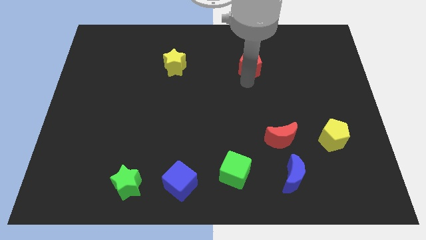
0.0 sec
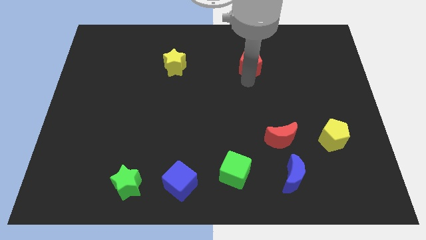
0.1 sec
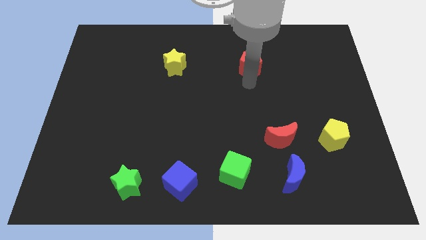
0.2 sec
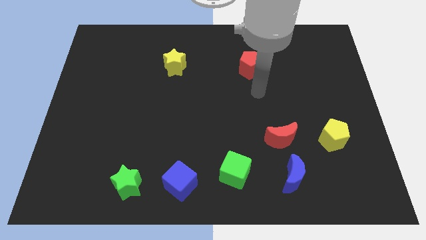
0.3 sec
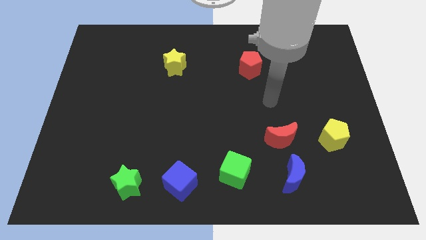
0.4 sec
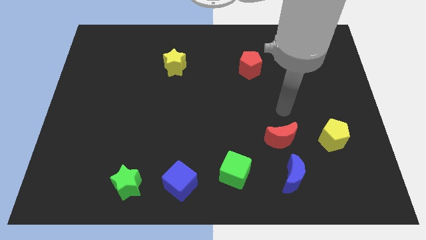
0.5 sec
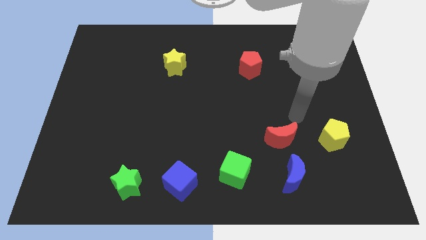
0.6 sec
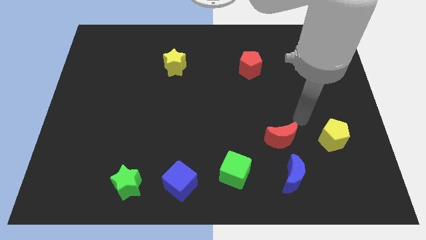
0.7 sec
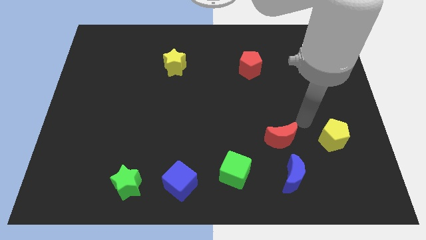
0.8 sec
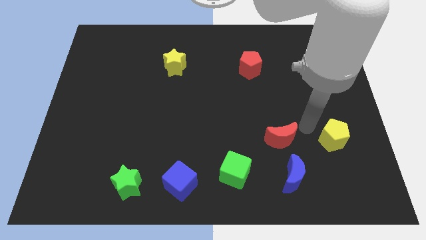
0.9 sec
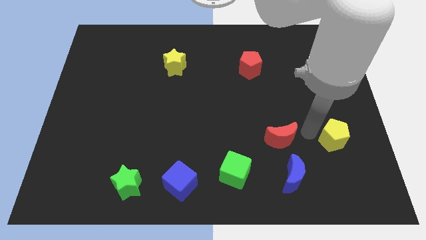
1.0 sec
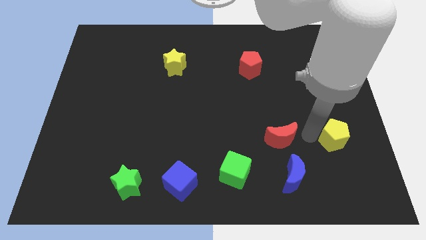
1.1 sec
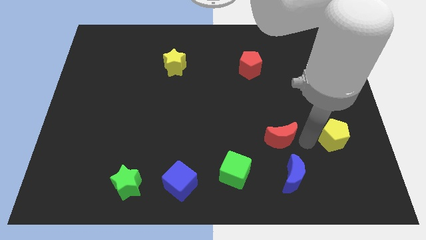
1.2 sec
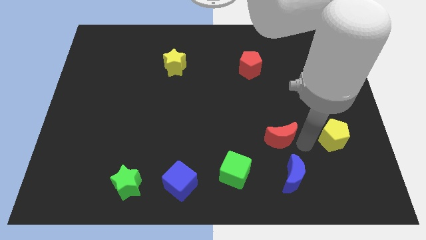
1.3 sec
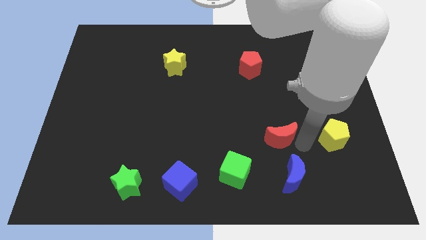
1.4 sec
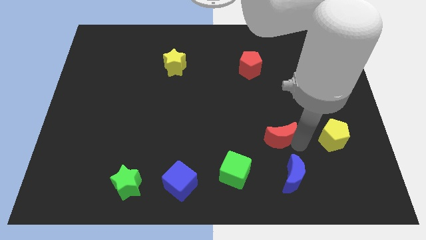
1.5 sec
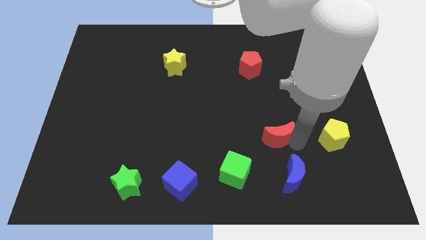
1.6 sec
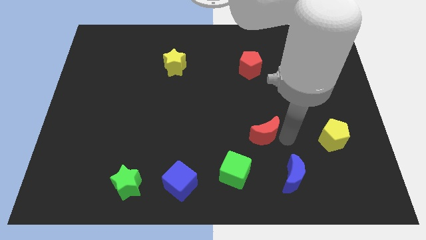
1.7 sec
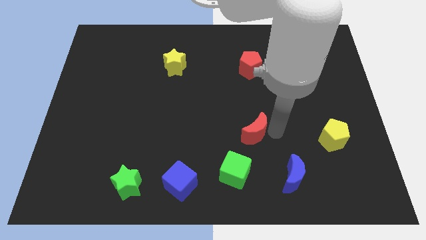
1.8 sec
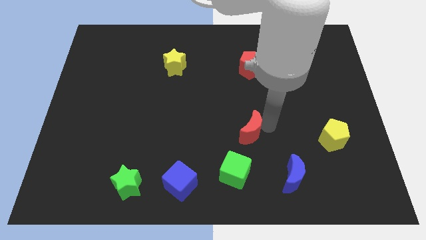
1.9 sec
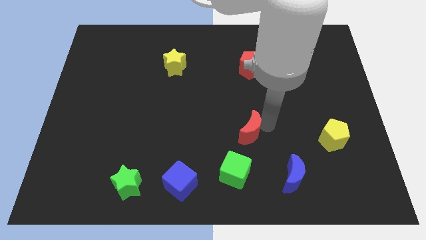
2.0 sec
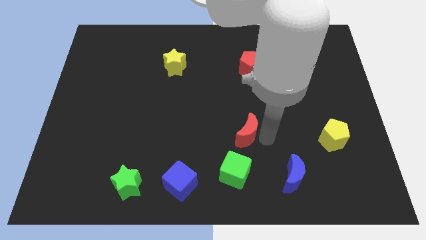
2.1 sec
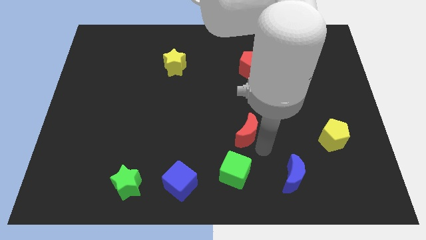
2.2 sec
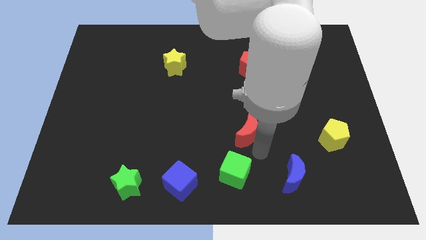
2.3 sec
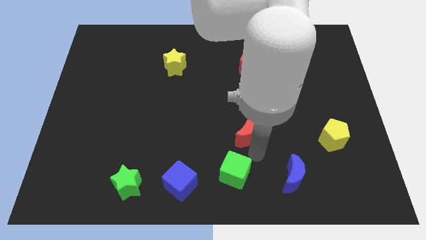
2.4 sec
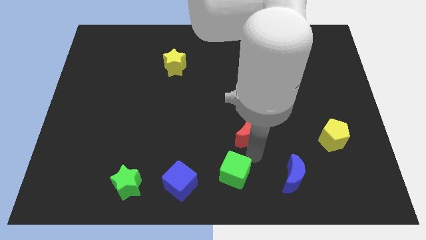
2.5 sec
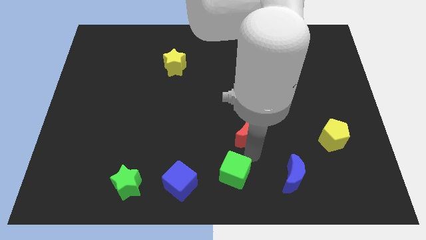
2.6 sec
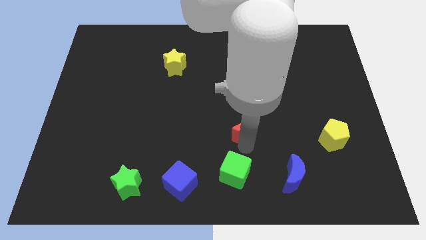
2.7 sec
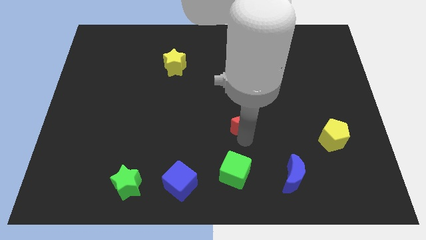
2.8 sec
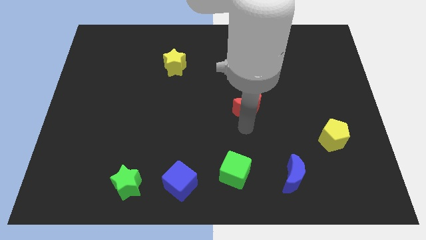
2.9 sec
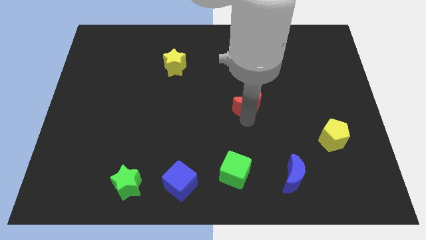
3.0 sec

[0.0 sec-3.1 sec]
push the red moon to the top side of the green cube

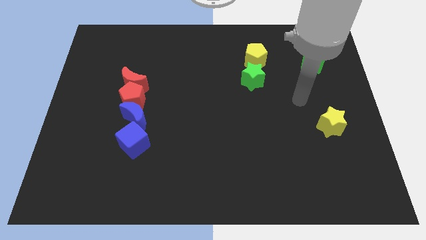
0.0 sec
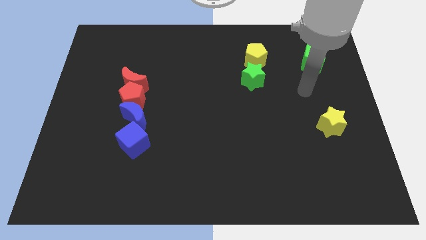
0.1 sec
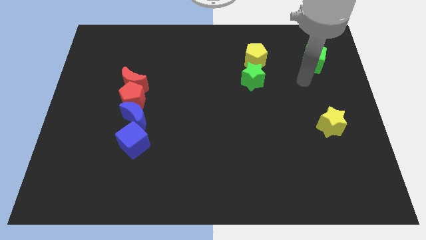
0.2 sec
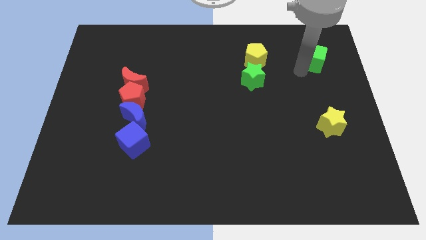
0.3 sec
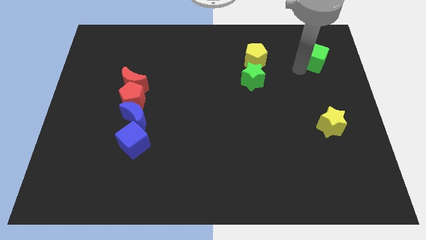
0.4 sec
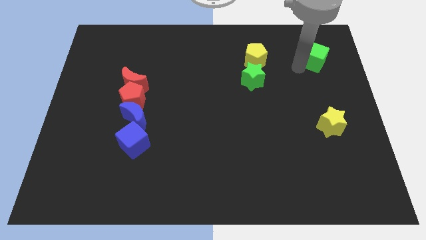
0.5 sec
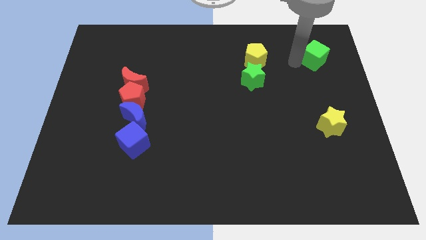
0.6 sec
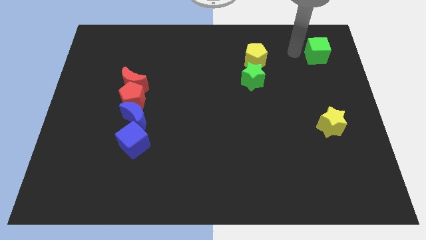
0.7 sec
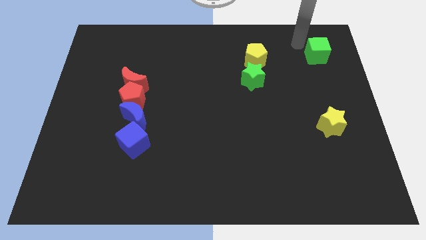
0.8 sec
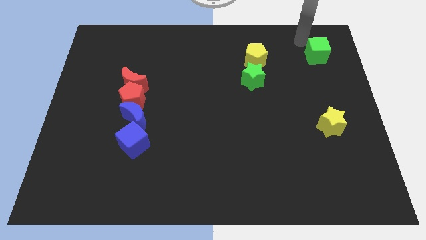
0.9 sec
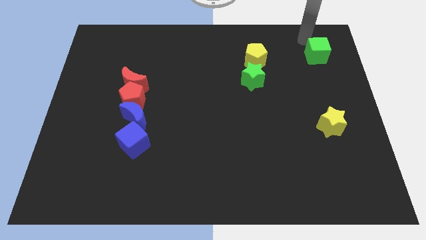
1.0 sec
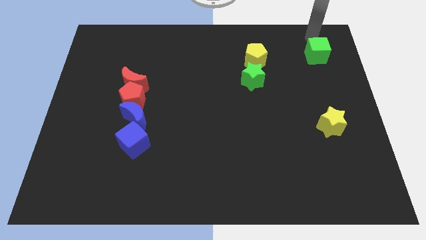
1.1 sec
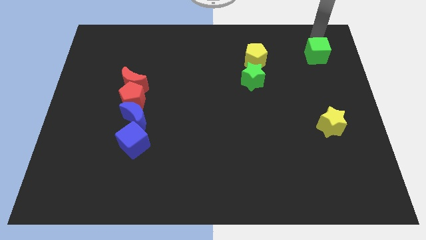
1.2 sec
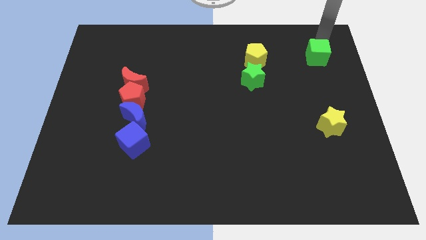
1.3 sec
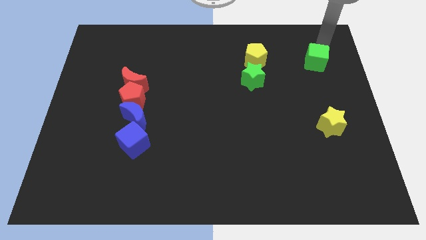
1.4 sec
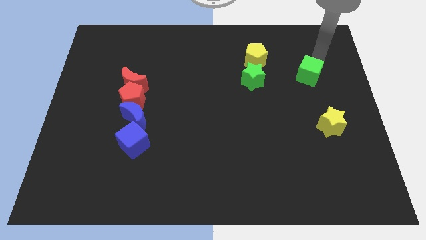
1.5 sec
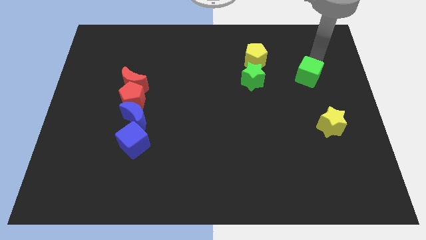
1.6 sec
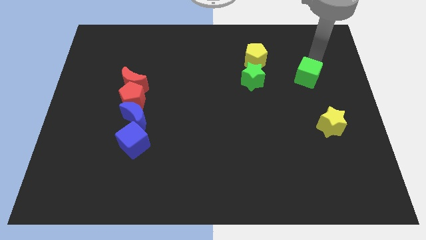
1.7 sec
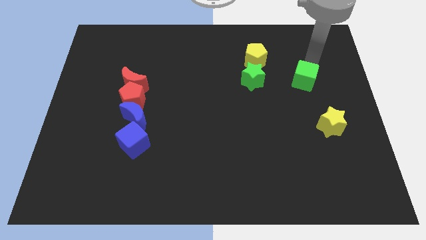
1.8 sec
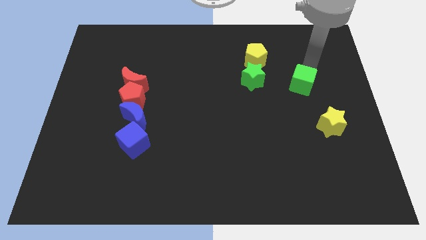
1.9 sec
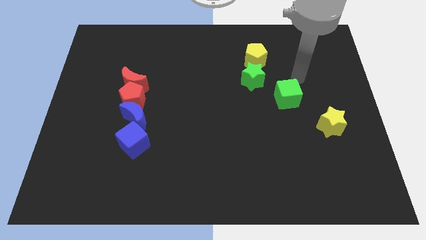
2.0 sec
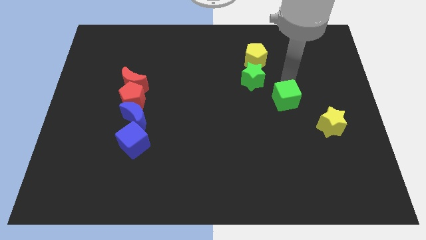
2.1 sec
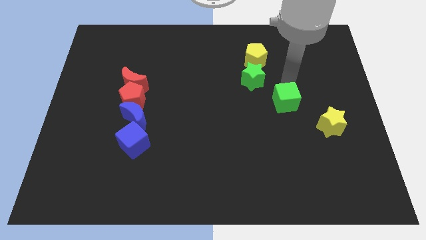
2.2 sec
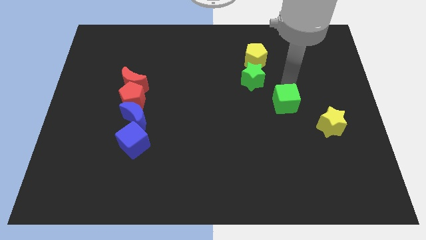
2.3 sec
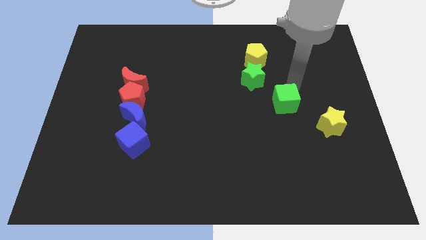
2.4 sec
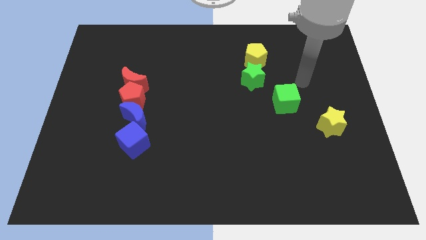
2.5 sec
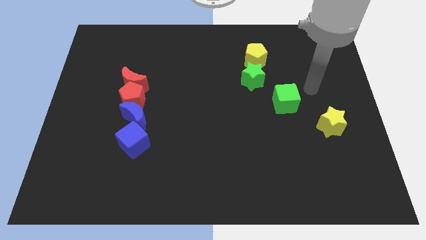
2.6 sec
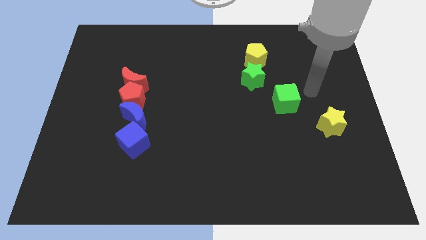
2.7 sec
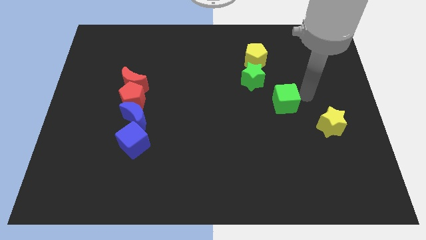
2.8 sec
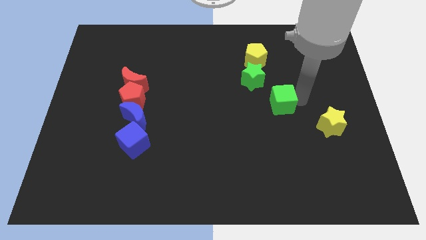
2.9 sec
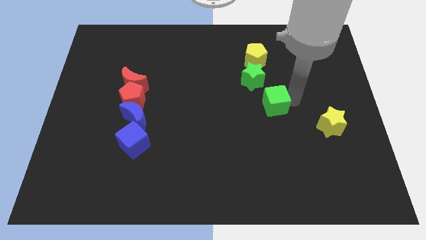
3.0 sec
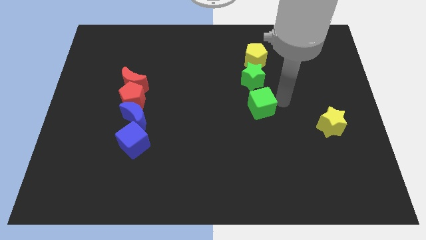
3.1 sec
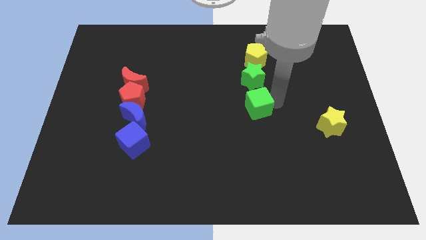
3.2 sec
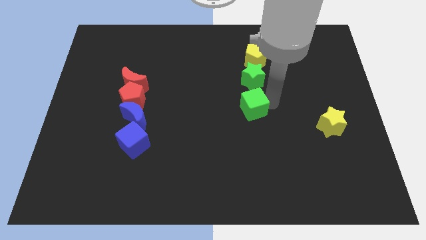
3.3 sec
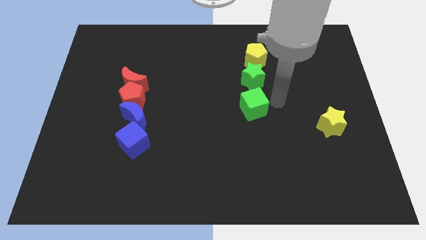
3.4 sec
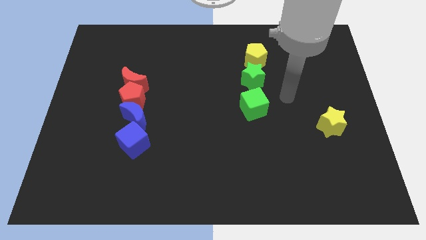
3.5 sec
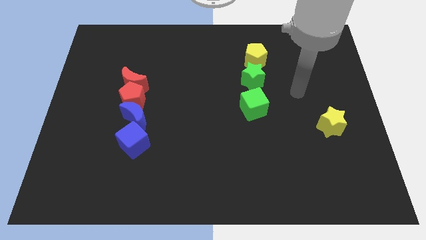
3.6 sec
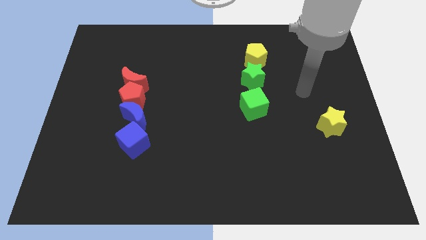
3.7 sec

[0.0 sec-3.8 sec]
place the green cube under the green star

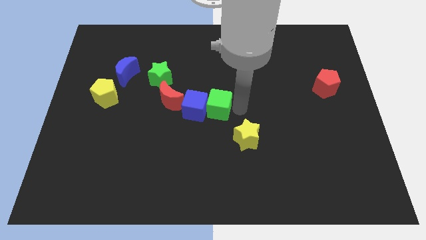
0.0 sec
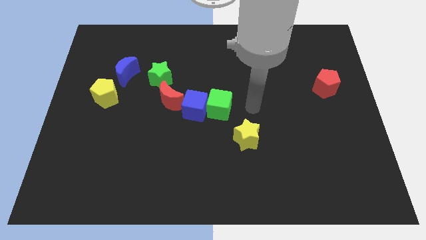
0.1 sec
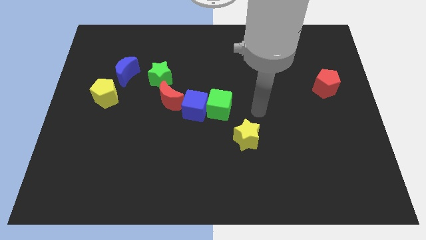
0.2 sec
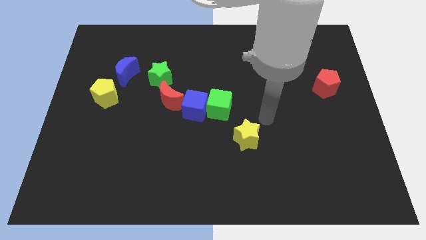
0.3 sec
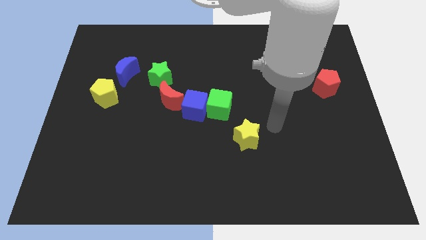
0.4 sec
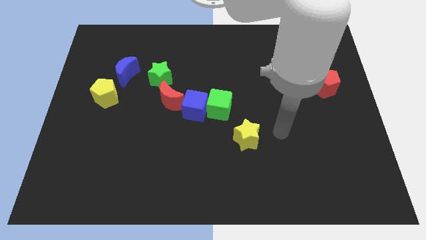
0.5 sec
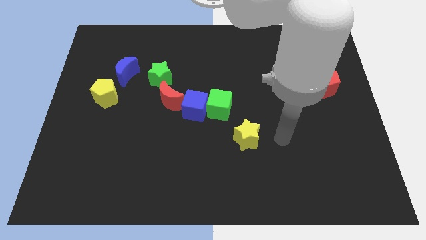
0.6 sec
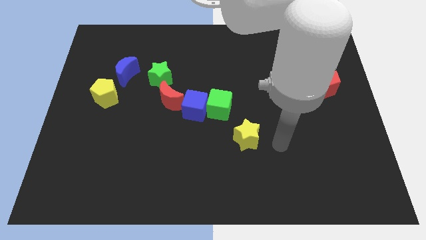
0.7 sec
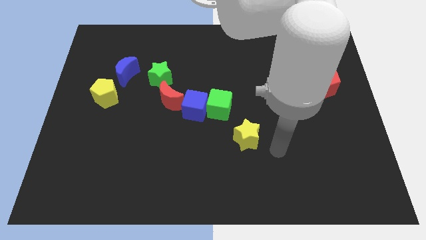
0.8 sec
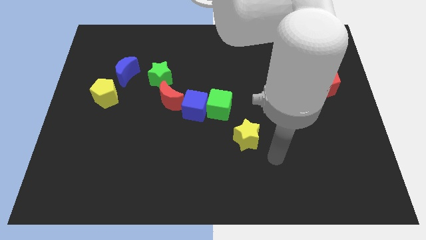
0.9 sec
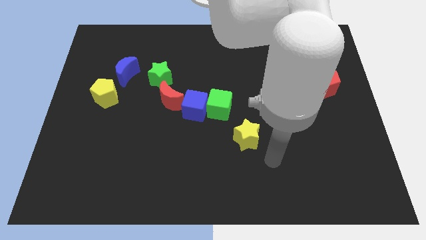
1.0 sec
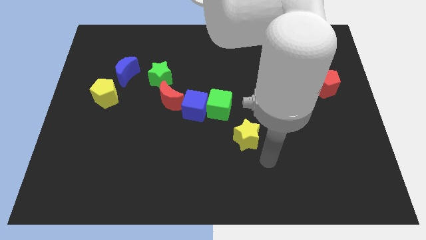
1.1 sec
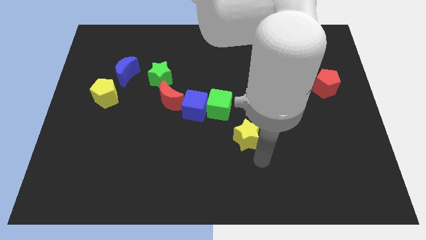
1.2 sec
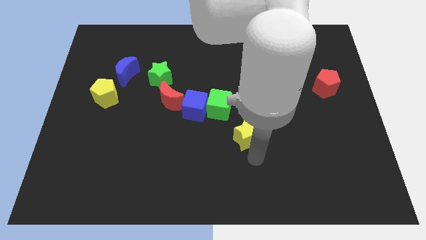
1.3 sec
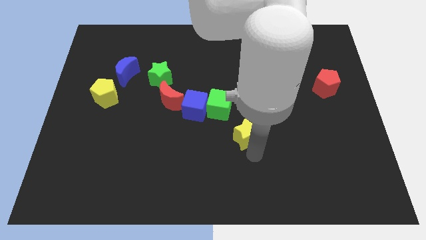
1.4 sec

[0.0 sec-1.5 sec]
move away from the green cube

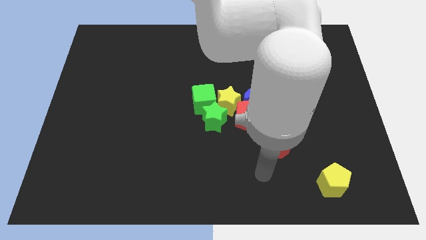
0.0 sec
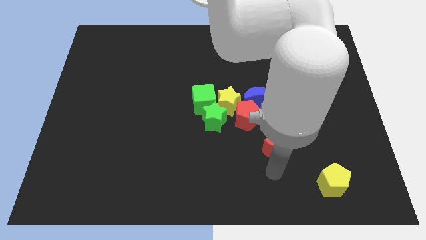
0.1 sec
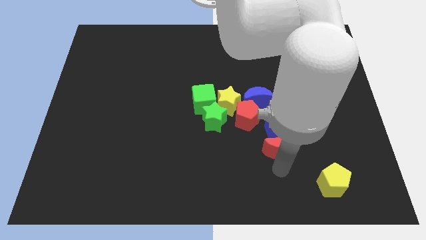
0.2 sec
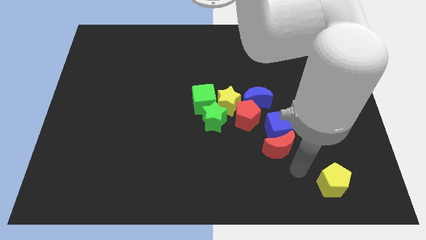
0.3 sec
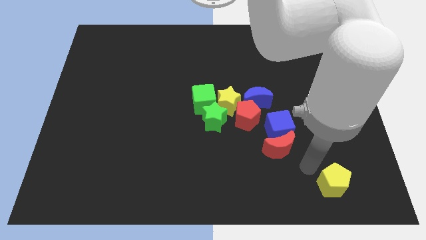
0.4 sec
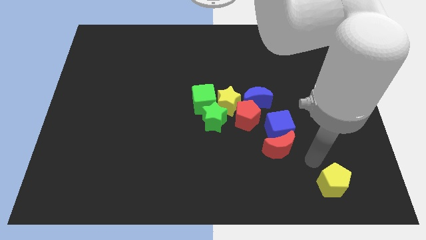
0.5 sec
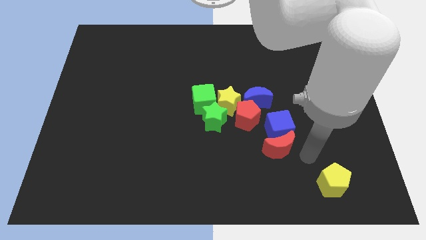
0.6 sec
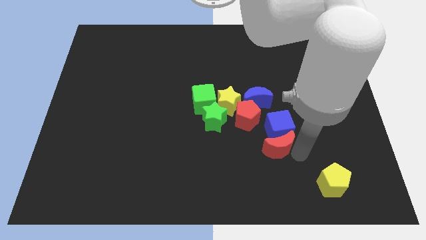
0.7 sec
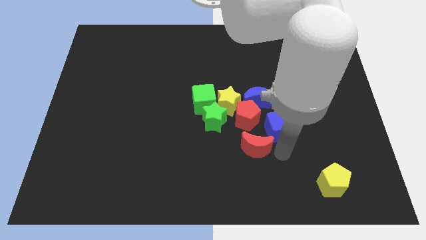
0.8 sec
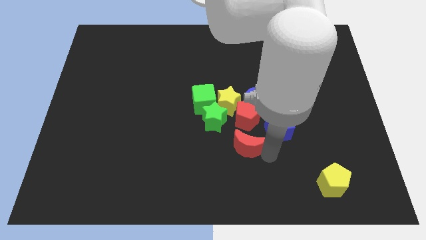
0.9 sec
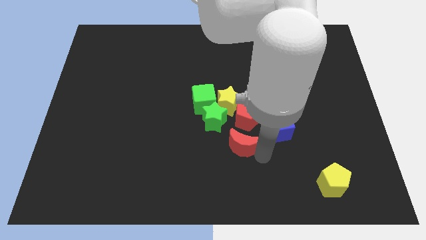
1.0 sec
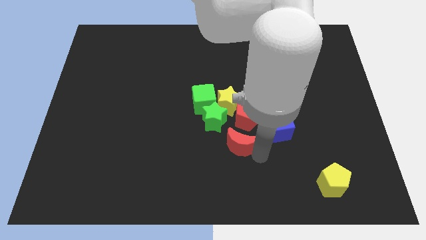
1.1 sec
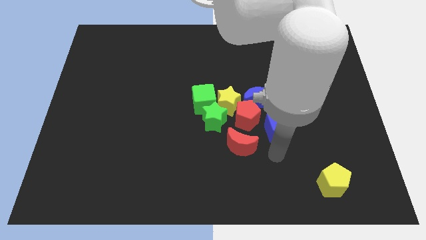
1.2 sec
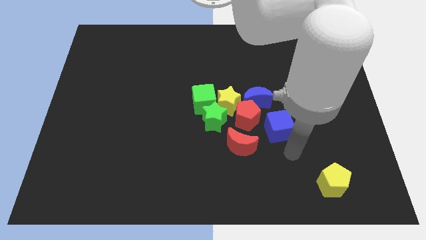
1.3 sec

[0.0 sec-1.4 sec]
separate the red crescent from the blue cube
